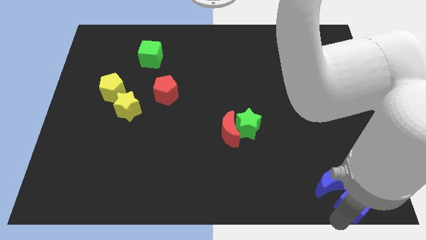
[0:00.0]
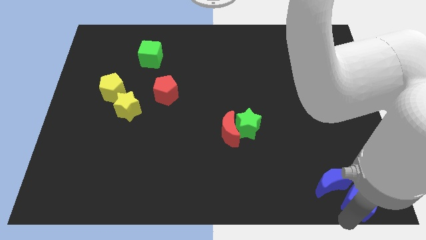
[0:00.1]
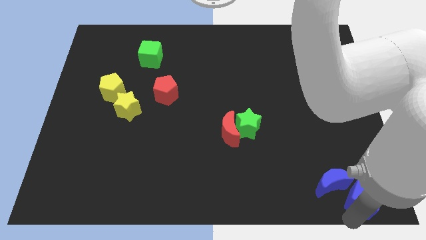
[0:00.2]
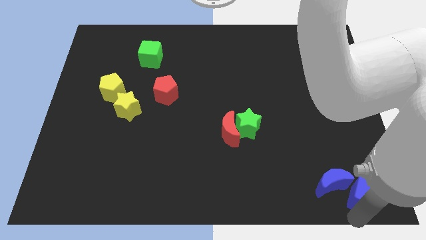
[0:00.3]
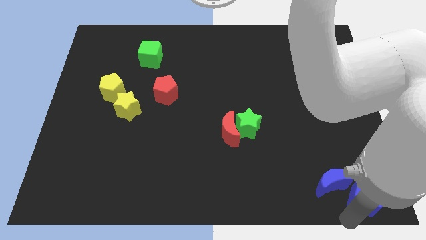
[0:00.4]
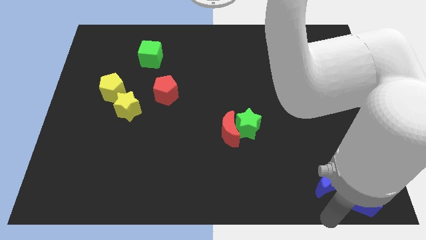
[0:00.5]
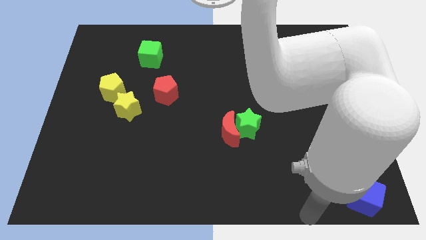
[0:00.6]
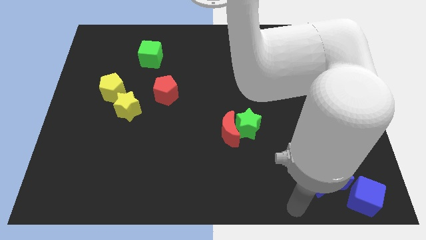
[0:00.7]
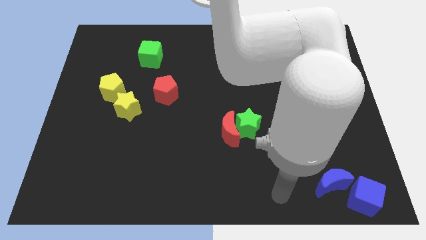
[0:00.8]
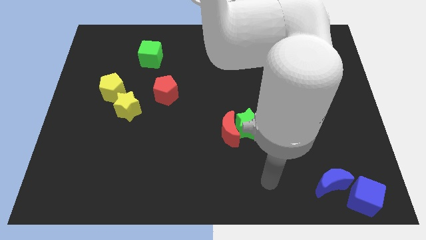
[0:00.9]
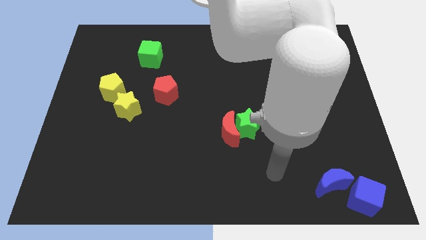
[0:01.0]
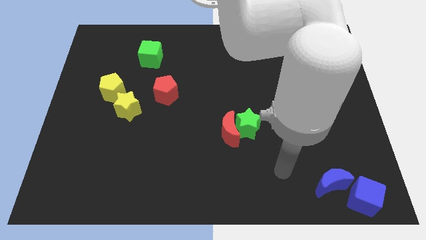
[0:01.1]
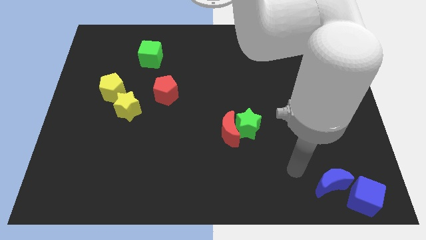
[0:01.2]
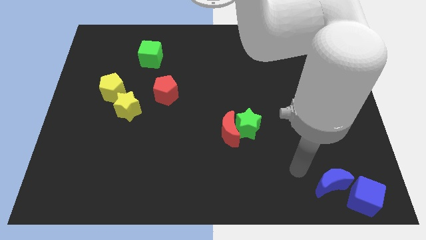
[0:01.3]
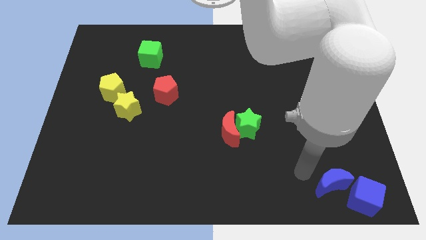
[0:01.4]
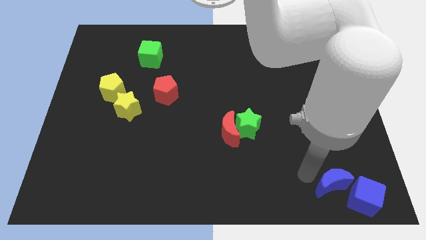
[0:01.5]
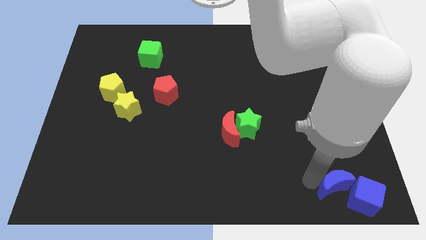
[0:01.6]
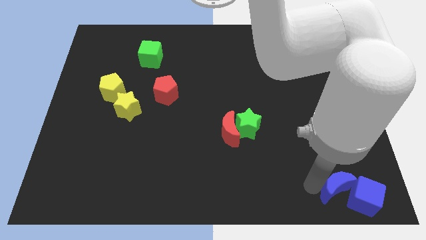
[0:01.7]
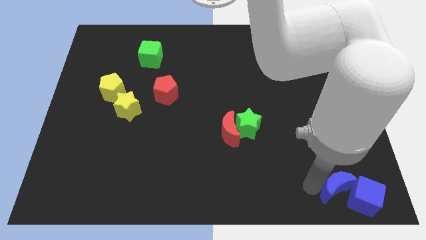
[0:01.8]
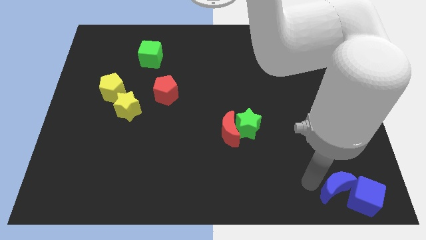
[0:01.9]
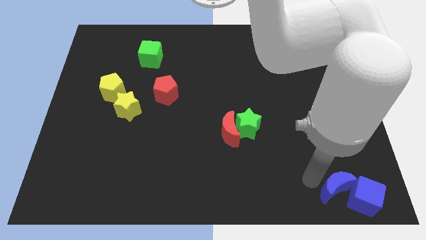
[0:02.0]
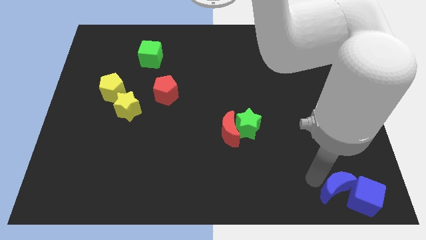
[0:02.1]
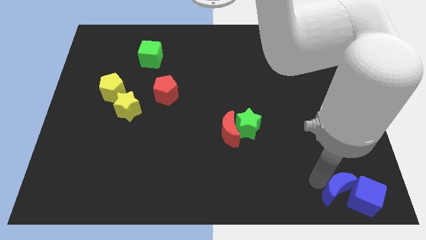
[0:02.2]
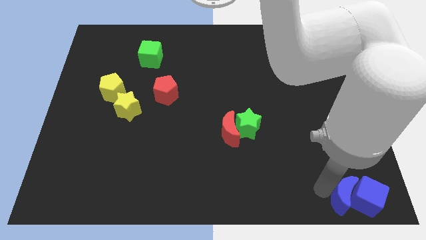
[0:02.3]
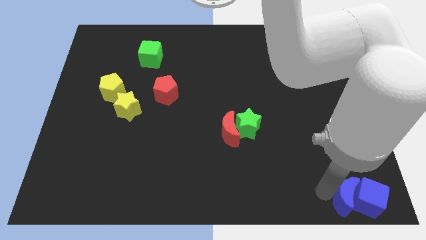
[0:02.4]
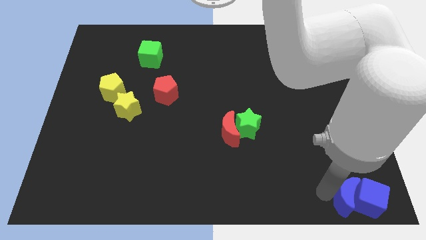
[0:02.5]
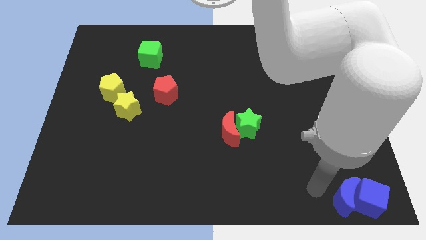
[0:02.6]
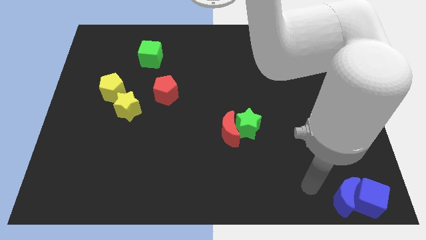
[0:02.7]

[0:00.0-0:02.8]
push the blue moon close to the blue cube

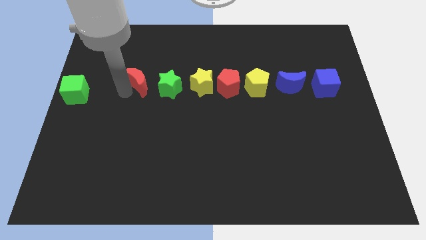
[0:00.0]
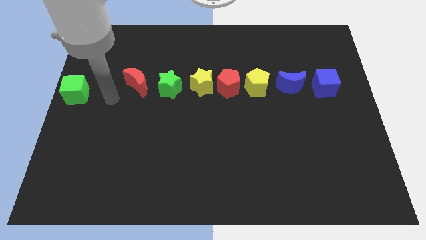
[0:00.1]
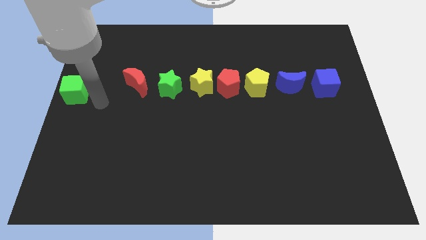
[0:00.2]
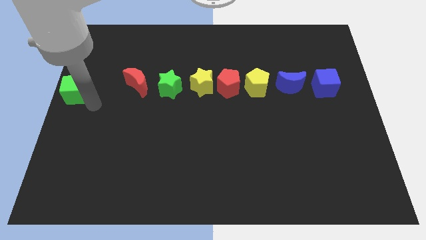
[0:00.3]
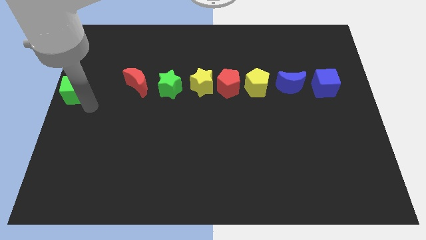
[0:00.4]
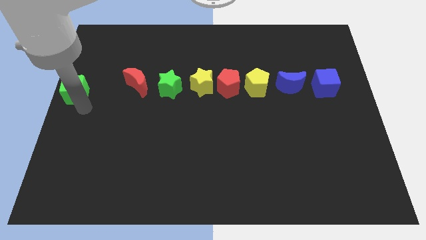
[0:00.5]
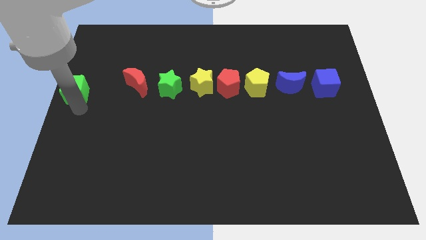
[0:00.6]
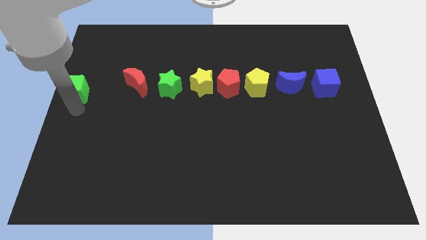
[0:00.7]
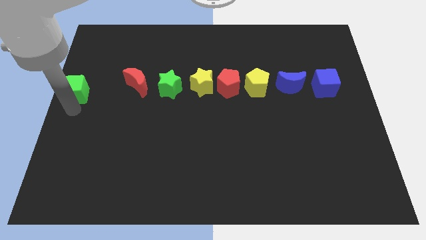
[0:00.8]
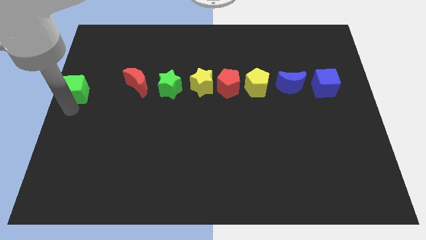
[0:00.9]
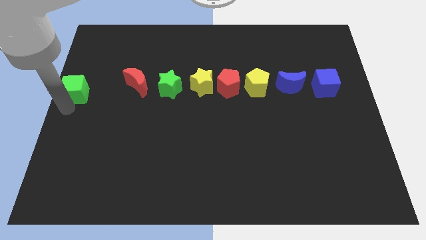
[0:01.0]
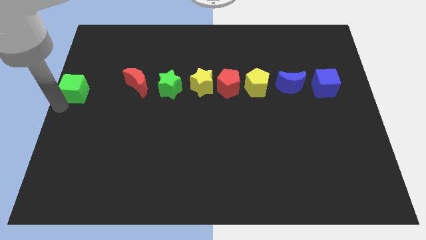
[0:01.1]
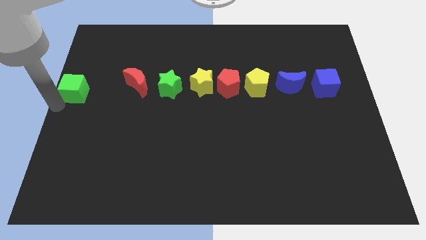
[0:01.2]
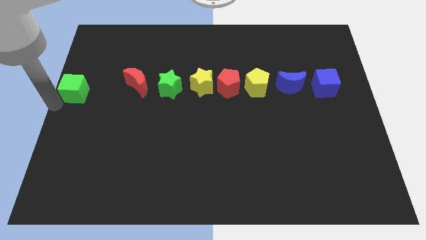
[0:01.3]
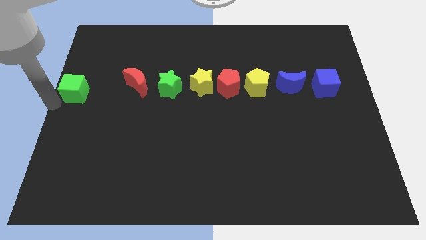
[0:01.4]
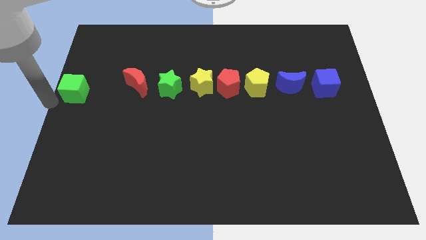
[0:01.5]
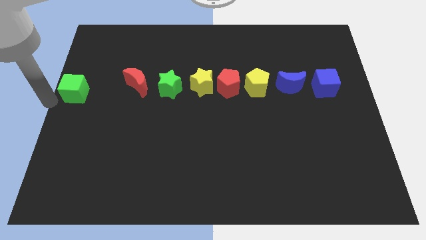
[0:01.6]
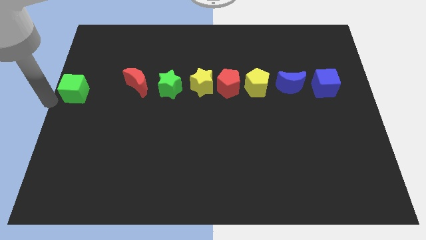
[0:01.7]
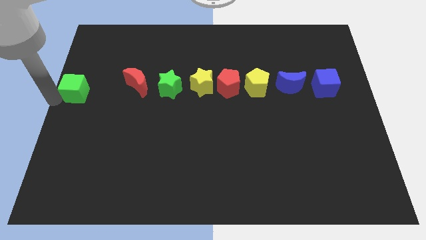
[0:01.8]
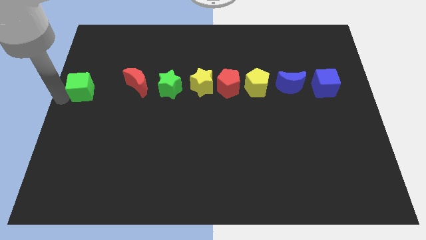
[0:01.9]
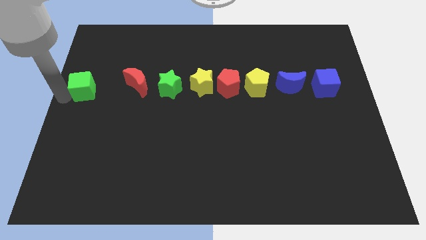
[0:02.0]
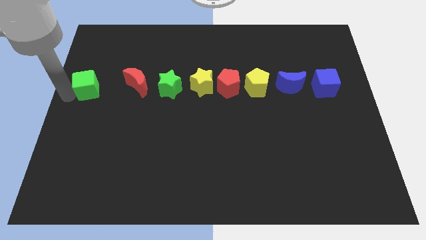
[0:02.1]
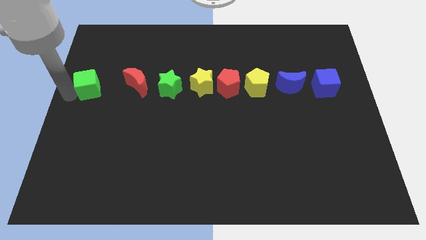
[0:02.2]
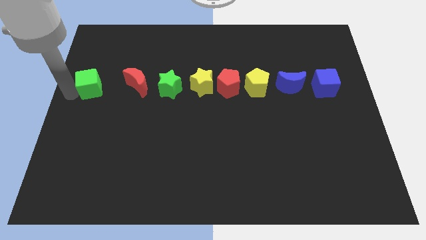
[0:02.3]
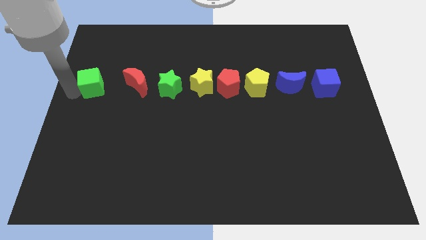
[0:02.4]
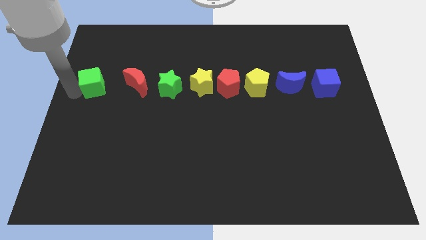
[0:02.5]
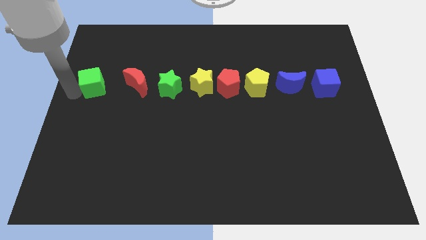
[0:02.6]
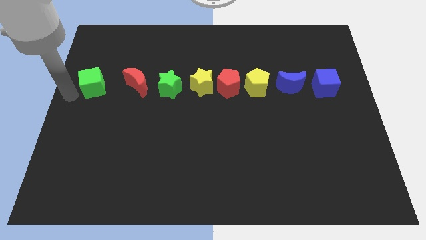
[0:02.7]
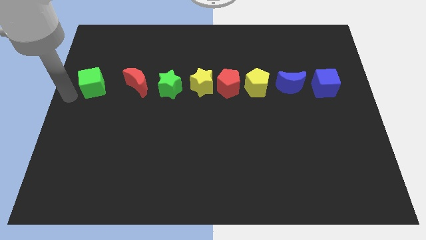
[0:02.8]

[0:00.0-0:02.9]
move the green cube to the left of the red crescent

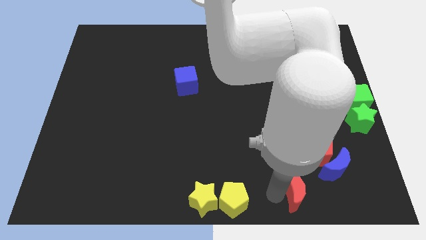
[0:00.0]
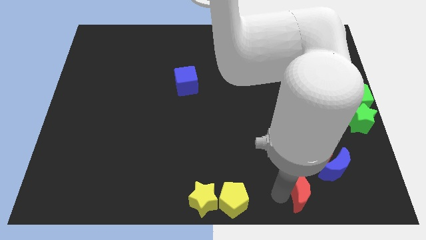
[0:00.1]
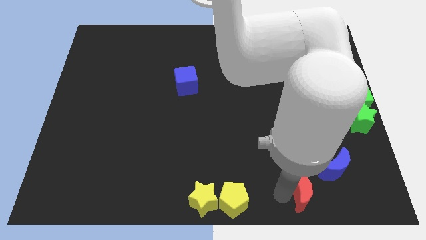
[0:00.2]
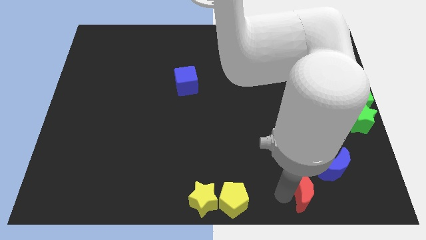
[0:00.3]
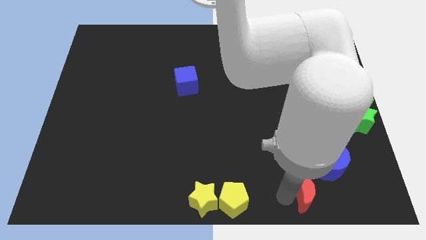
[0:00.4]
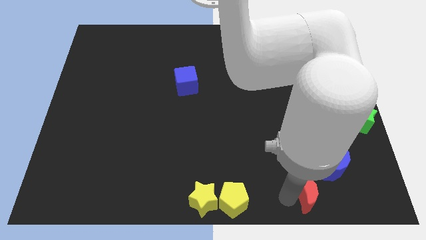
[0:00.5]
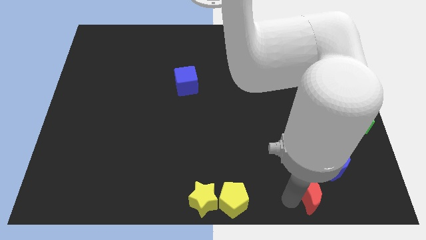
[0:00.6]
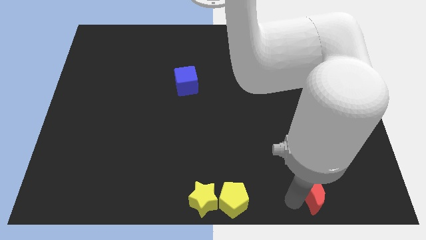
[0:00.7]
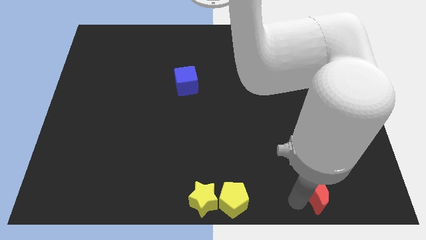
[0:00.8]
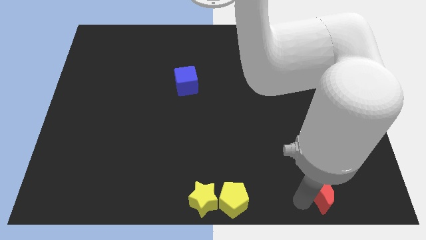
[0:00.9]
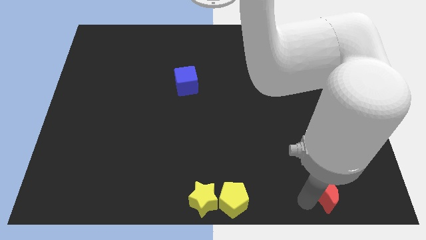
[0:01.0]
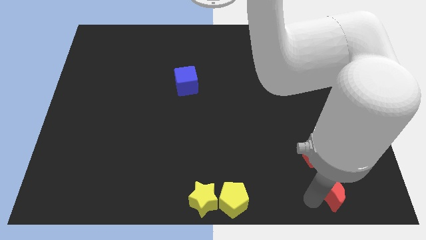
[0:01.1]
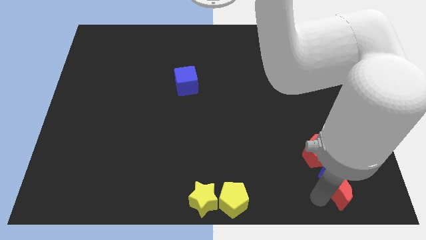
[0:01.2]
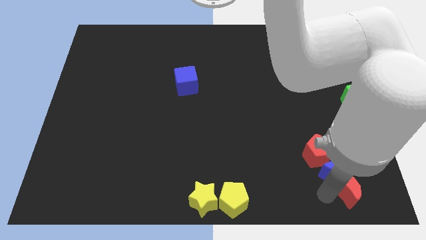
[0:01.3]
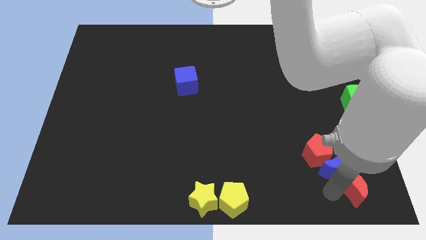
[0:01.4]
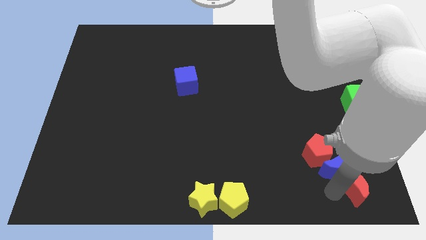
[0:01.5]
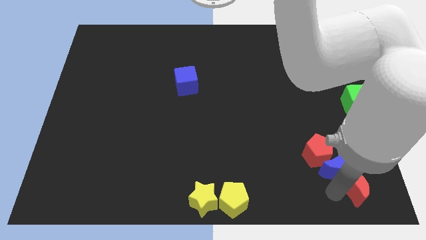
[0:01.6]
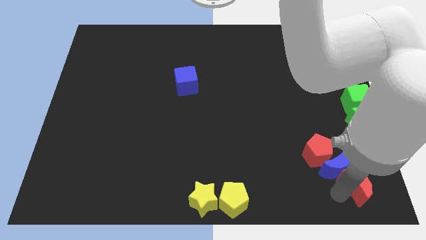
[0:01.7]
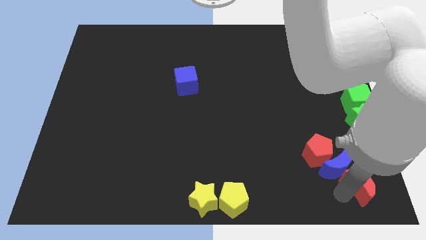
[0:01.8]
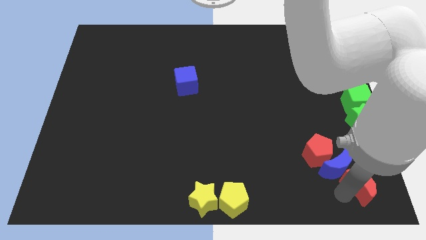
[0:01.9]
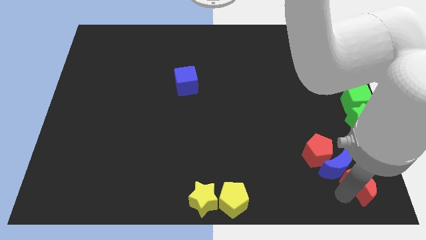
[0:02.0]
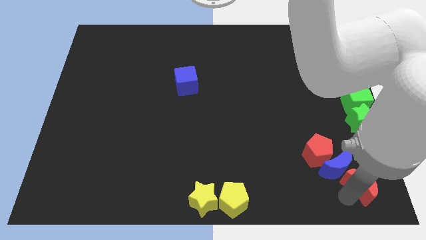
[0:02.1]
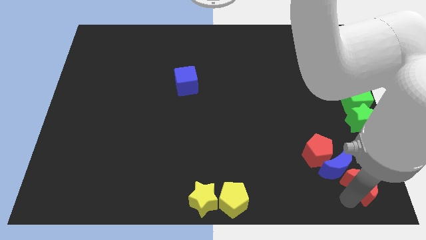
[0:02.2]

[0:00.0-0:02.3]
move the red crescent towards the bottom of the blue crescent

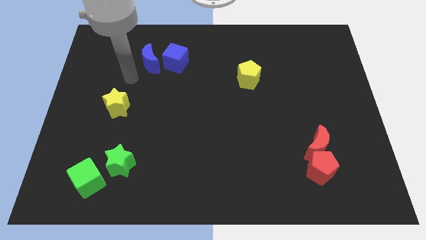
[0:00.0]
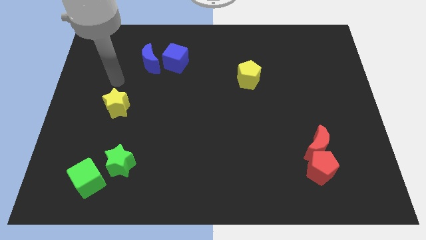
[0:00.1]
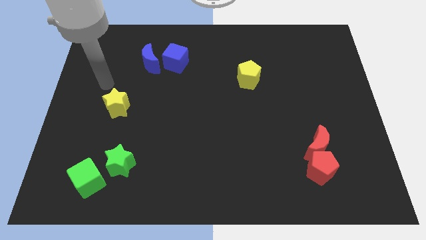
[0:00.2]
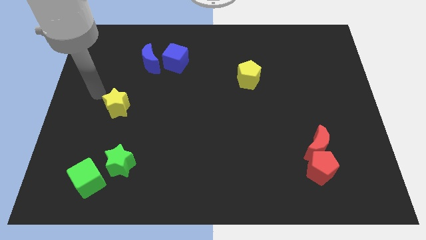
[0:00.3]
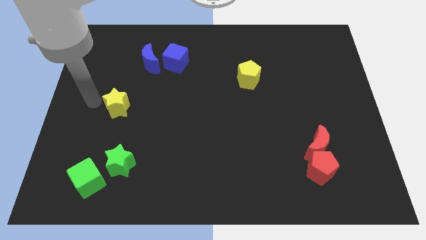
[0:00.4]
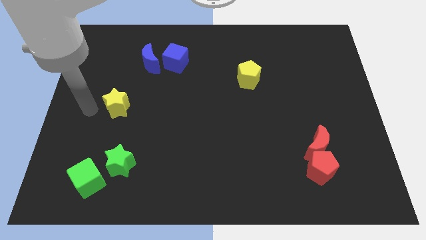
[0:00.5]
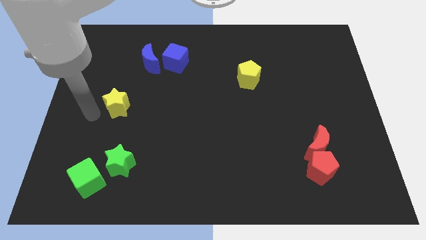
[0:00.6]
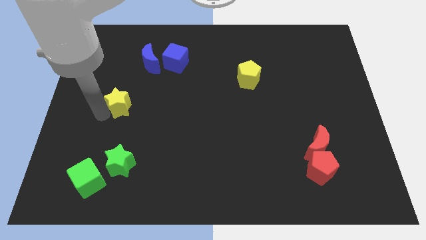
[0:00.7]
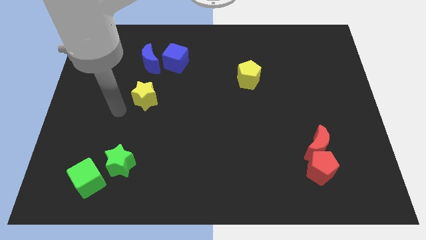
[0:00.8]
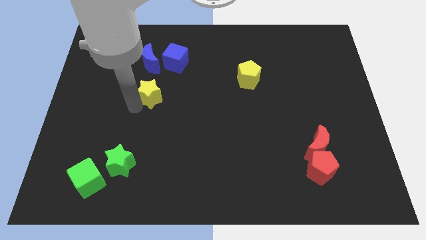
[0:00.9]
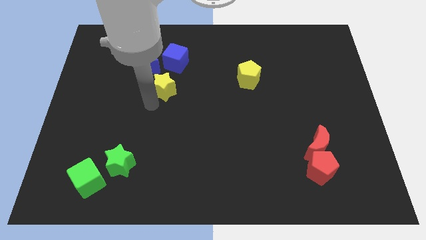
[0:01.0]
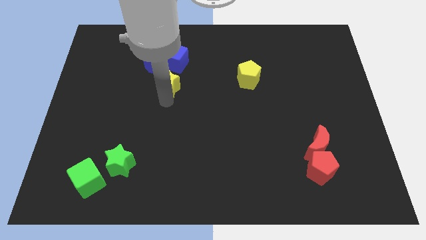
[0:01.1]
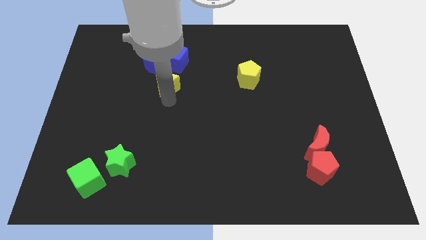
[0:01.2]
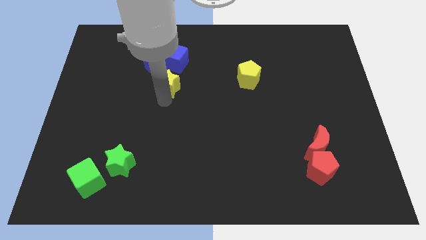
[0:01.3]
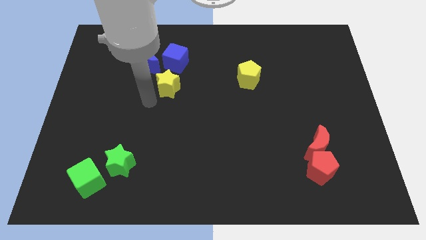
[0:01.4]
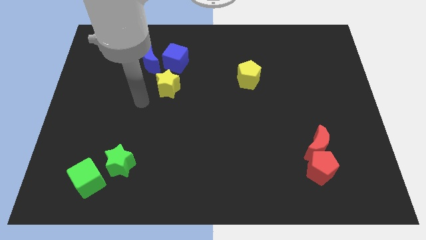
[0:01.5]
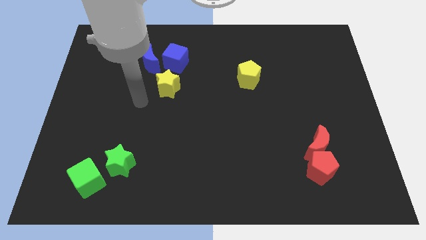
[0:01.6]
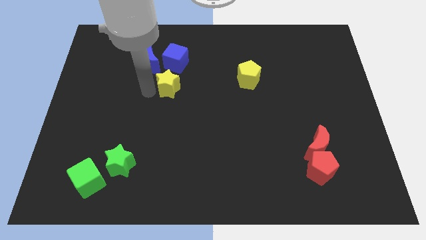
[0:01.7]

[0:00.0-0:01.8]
place the yellow star below blue cube
